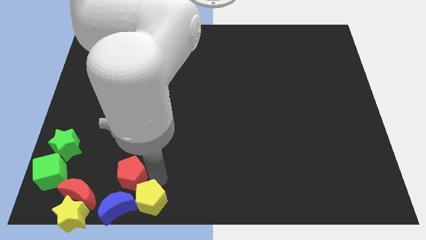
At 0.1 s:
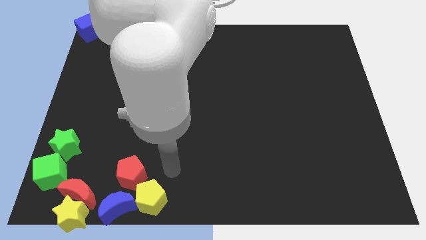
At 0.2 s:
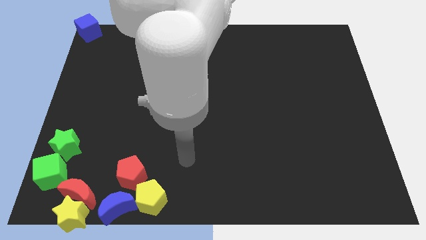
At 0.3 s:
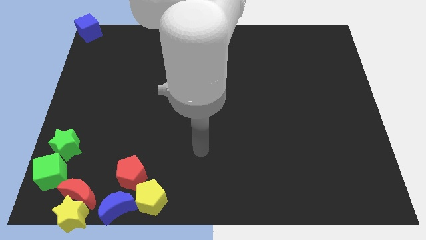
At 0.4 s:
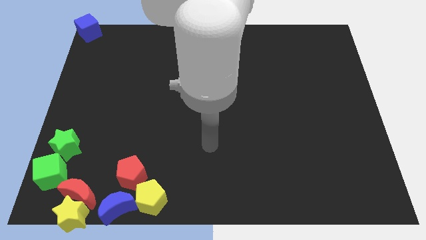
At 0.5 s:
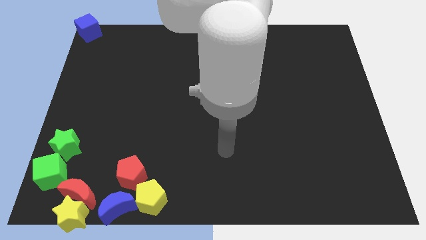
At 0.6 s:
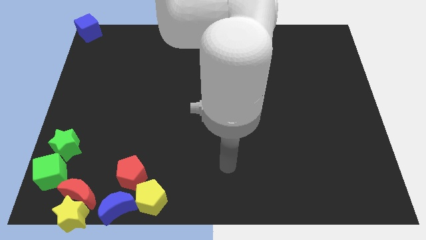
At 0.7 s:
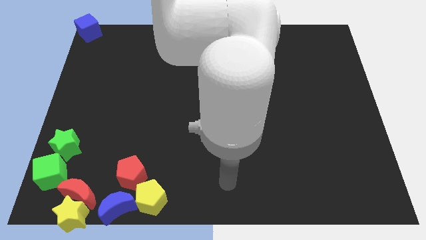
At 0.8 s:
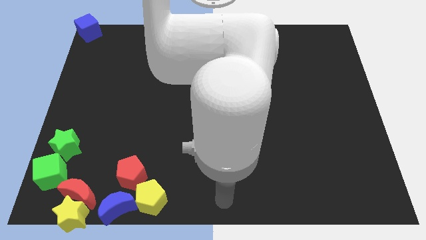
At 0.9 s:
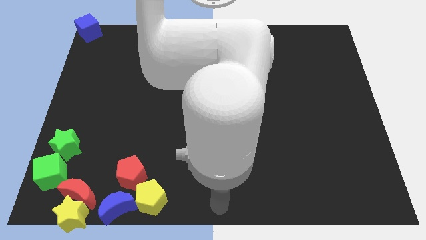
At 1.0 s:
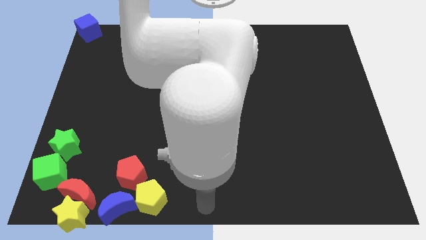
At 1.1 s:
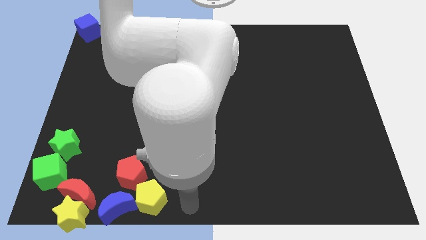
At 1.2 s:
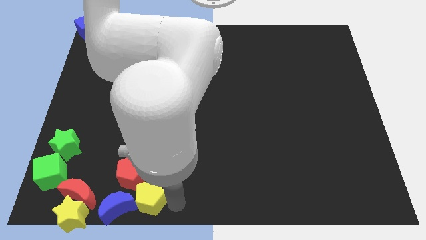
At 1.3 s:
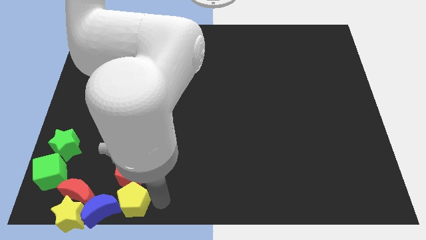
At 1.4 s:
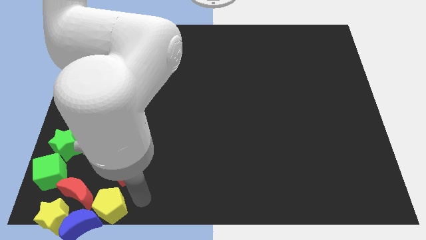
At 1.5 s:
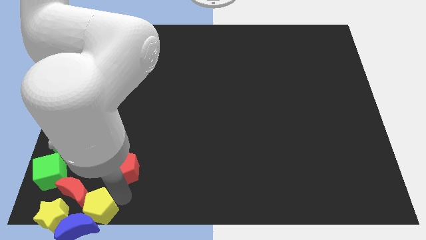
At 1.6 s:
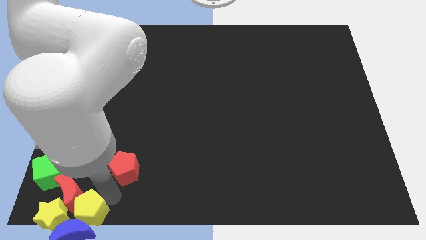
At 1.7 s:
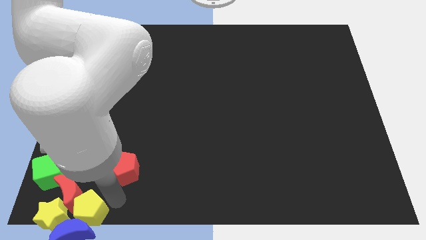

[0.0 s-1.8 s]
push the yellow pentagon into the group of blocks

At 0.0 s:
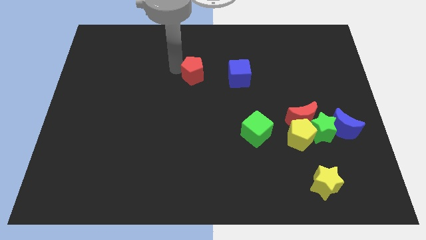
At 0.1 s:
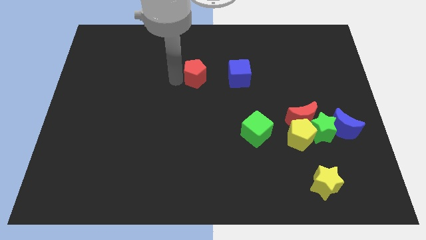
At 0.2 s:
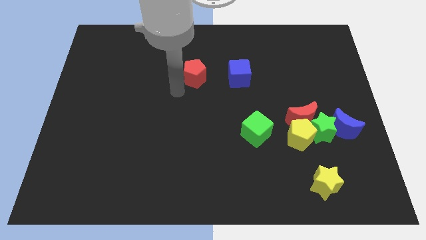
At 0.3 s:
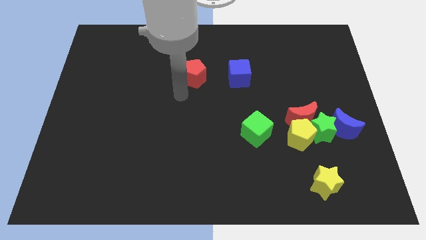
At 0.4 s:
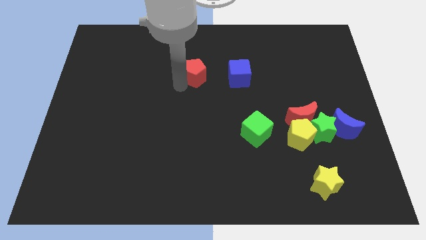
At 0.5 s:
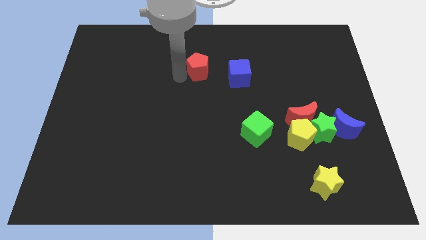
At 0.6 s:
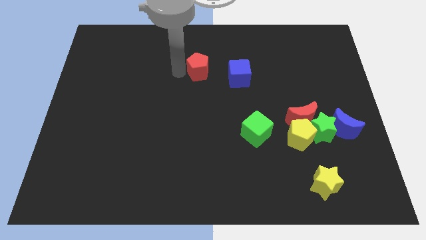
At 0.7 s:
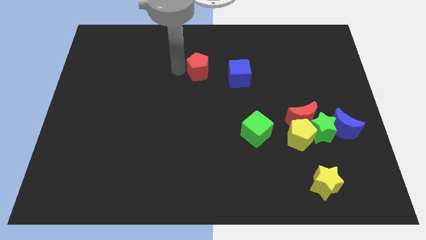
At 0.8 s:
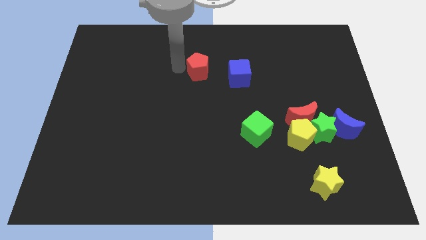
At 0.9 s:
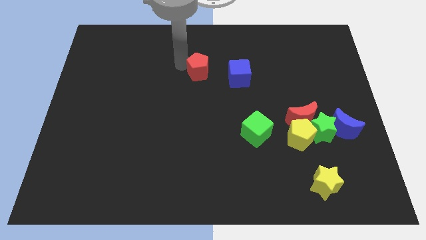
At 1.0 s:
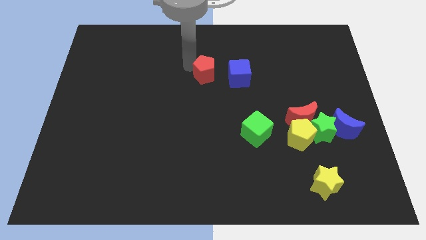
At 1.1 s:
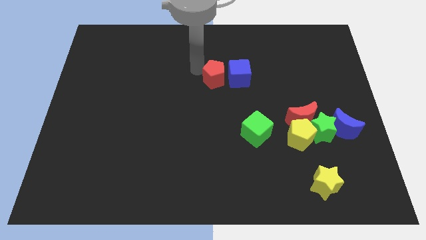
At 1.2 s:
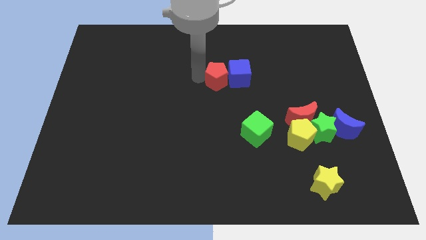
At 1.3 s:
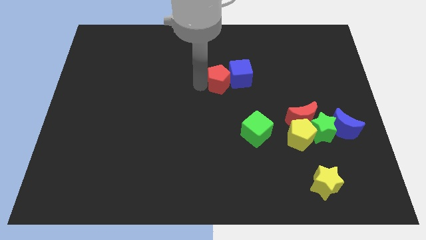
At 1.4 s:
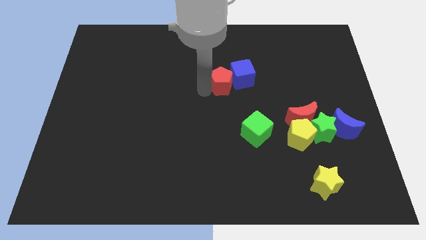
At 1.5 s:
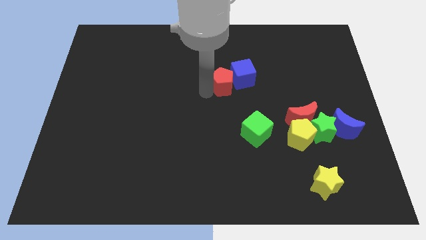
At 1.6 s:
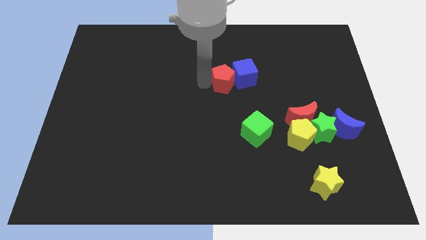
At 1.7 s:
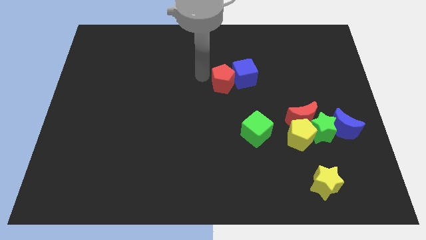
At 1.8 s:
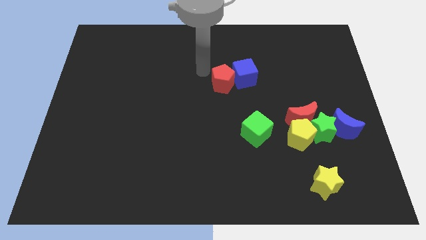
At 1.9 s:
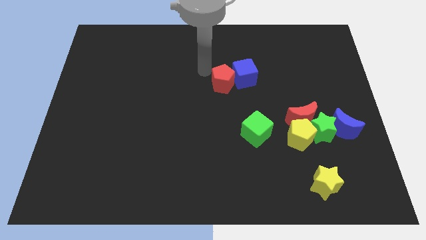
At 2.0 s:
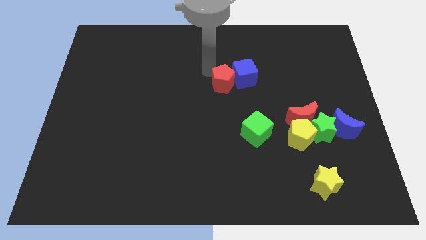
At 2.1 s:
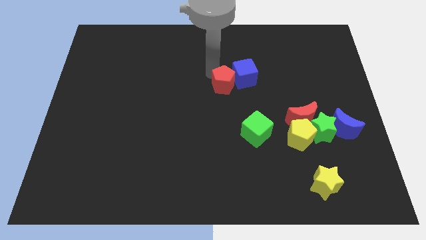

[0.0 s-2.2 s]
place the red pentagon close to the blue cube

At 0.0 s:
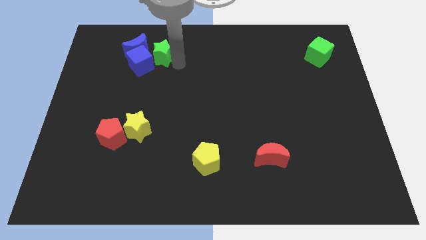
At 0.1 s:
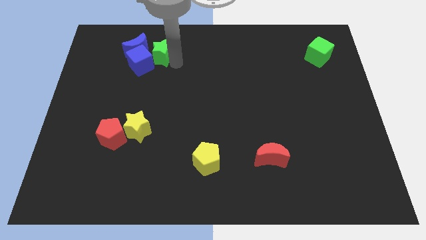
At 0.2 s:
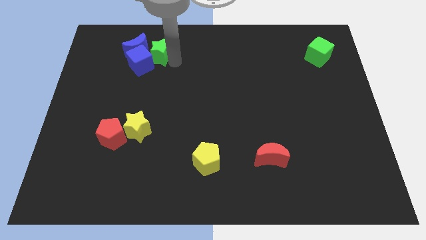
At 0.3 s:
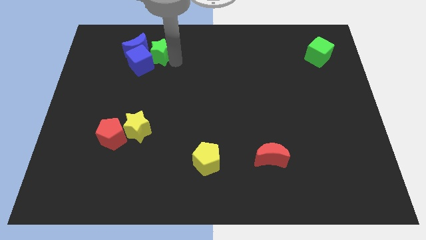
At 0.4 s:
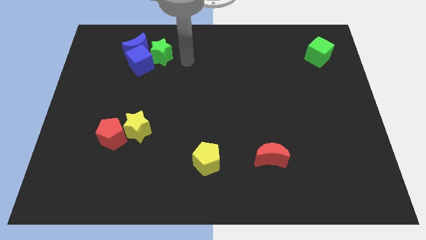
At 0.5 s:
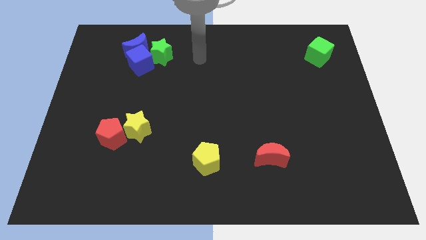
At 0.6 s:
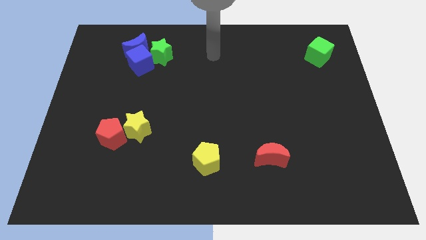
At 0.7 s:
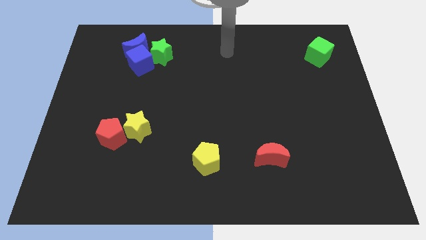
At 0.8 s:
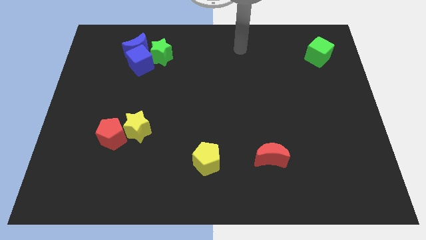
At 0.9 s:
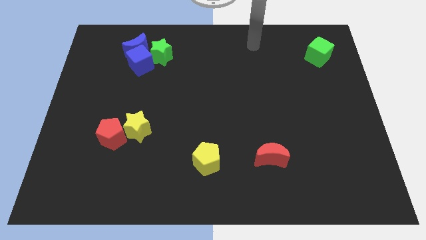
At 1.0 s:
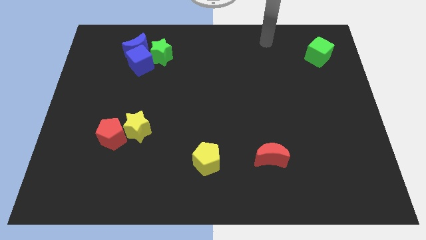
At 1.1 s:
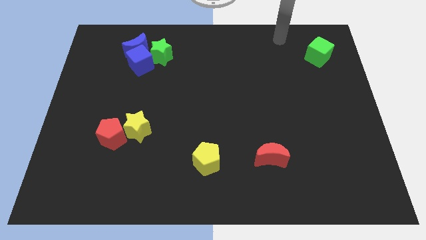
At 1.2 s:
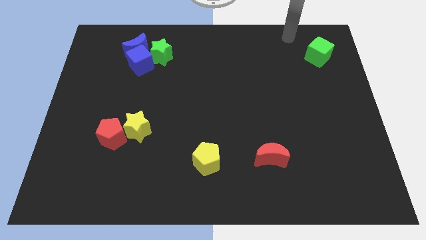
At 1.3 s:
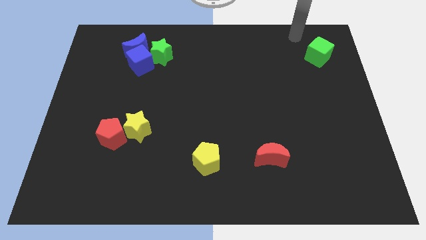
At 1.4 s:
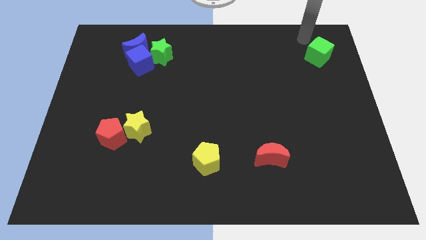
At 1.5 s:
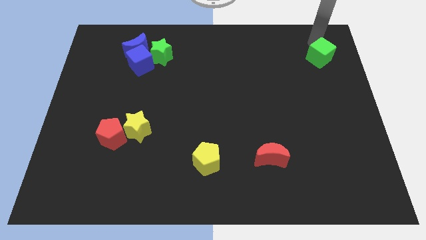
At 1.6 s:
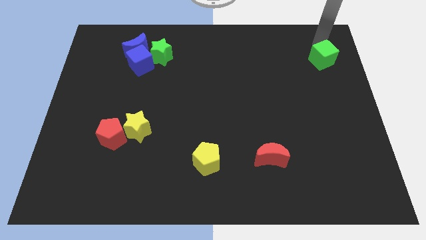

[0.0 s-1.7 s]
place the arm above the green cube

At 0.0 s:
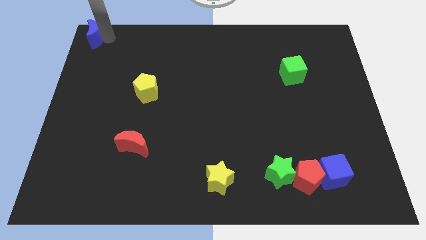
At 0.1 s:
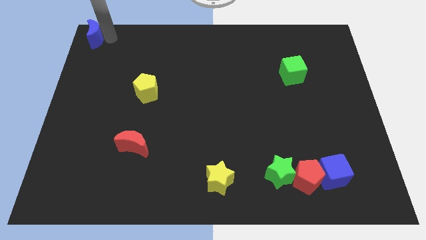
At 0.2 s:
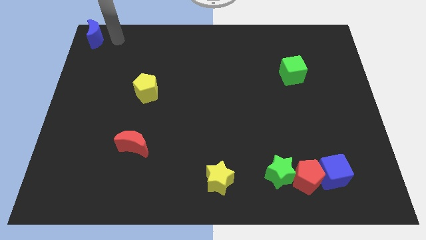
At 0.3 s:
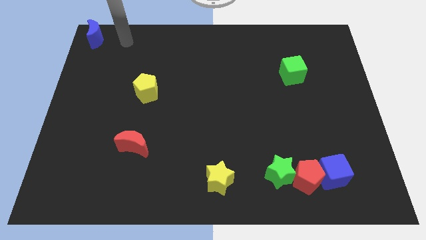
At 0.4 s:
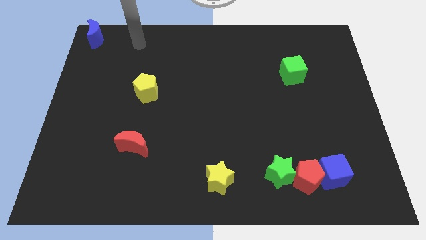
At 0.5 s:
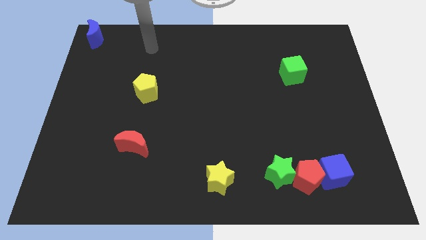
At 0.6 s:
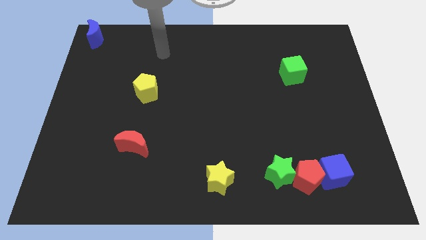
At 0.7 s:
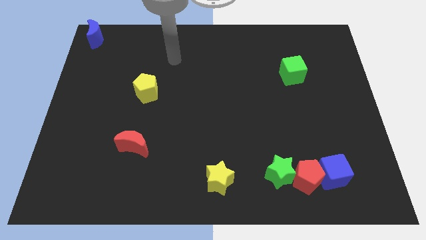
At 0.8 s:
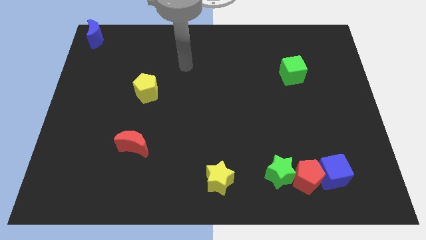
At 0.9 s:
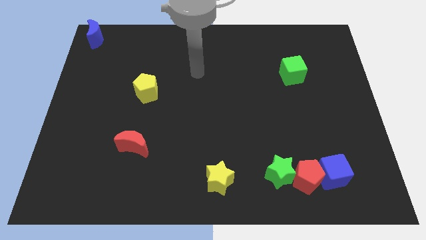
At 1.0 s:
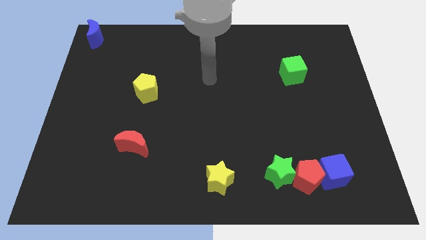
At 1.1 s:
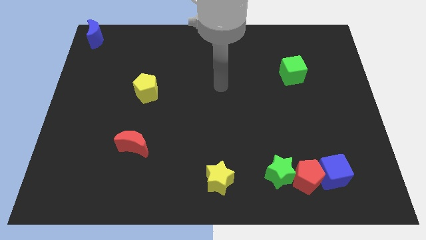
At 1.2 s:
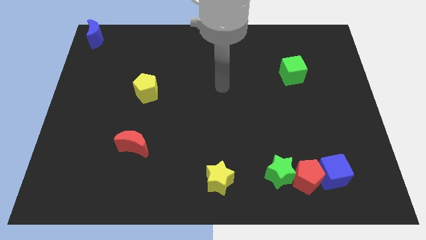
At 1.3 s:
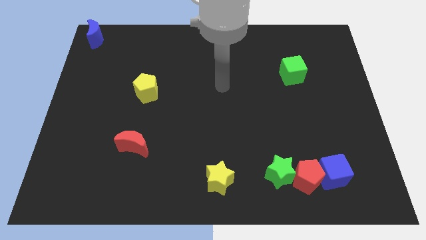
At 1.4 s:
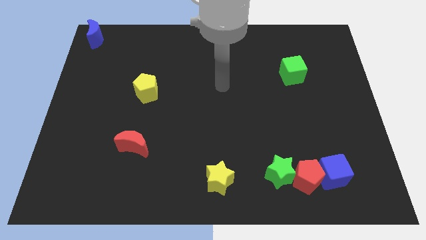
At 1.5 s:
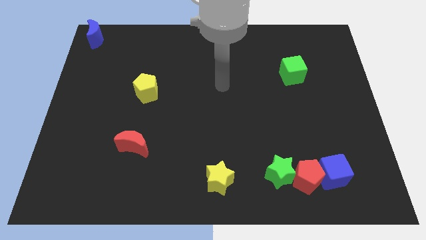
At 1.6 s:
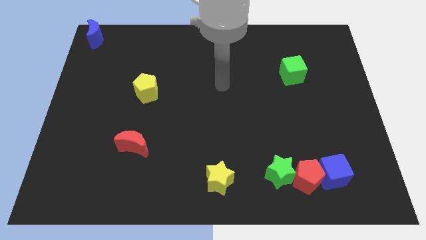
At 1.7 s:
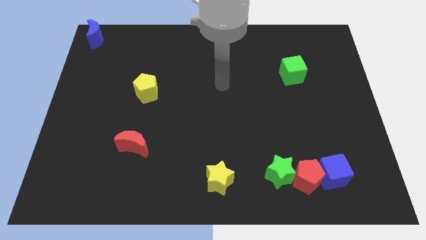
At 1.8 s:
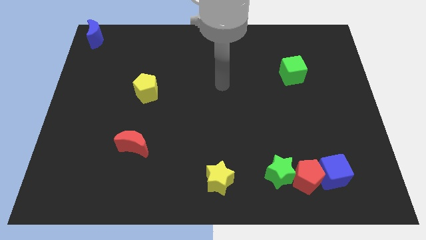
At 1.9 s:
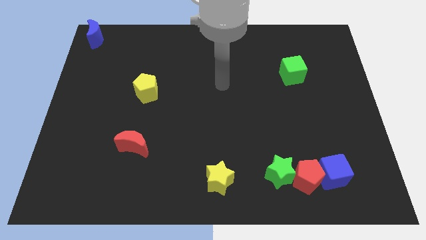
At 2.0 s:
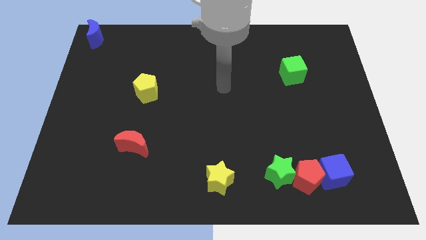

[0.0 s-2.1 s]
point your arm towards center

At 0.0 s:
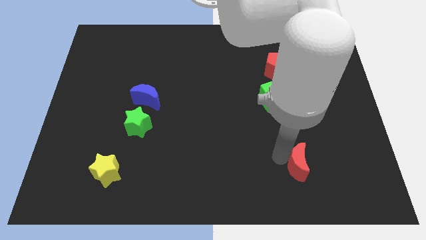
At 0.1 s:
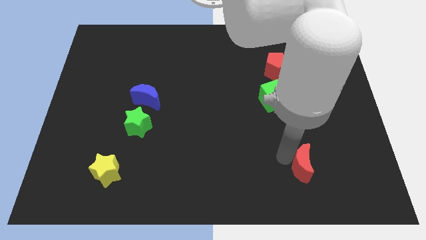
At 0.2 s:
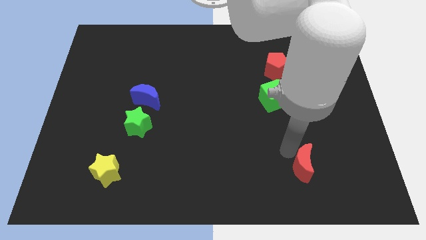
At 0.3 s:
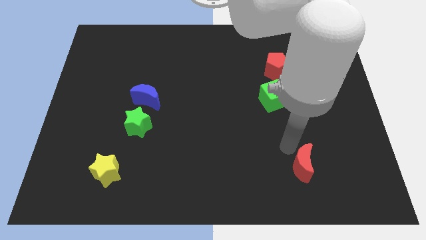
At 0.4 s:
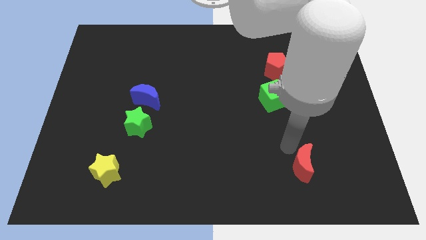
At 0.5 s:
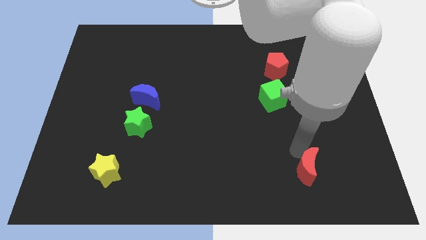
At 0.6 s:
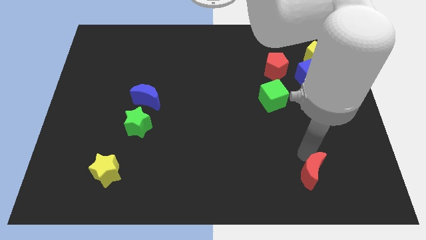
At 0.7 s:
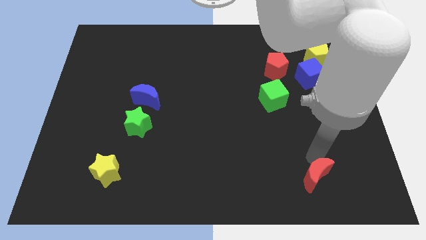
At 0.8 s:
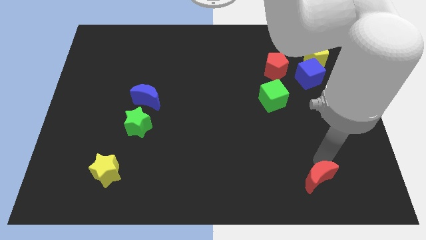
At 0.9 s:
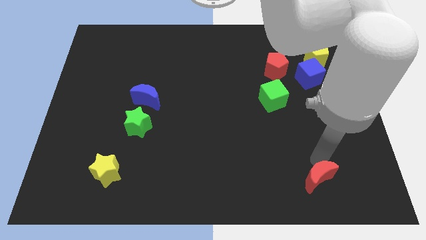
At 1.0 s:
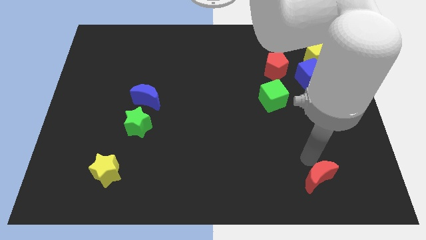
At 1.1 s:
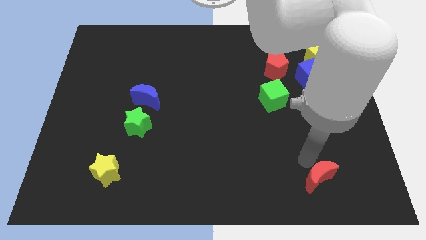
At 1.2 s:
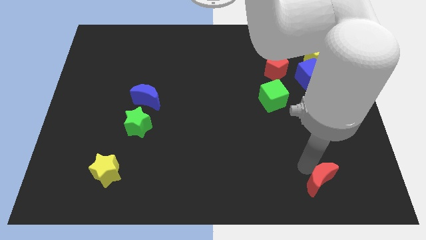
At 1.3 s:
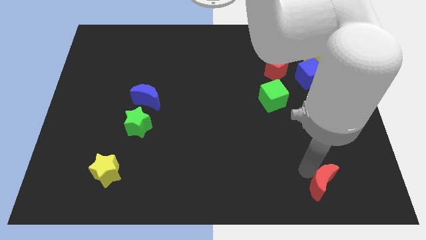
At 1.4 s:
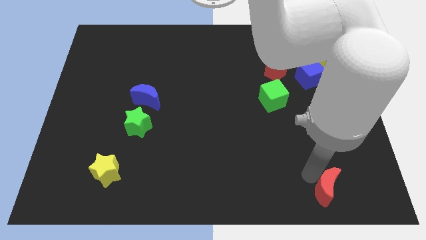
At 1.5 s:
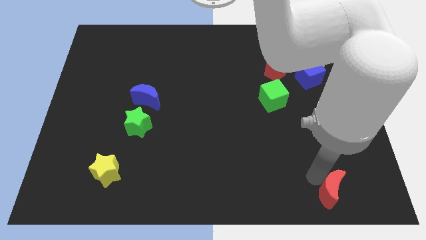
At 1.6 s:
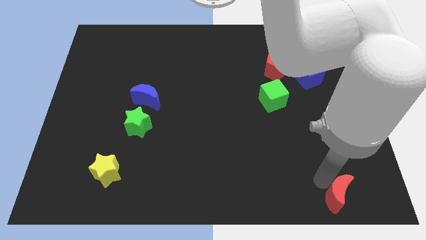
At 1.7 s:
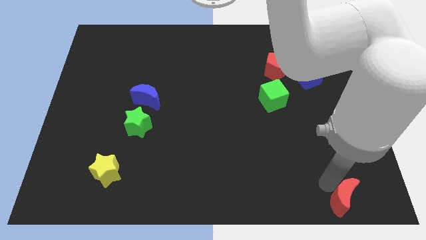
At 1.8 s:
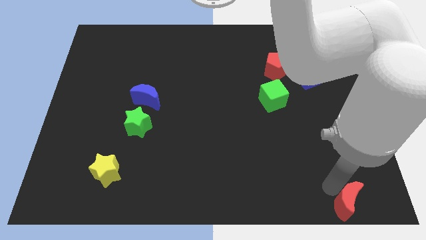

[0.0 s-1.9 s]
move the red moon towards the bottom right corner of the board
